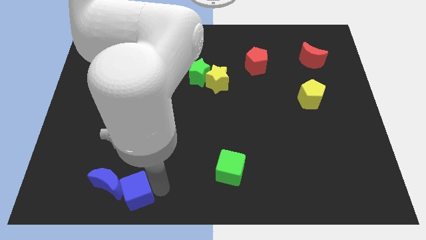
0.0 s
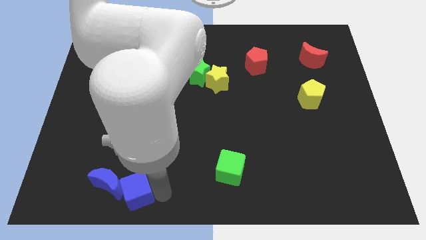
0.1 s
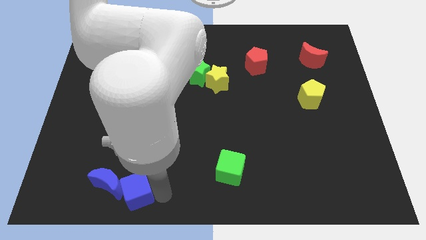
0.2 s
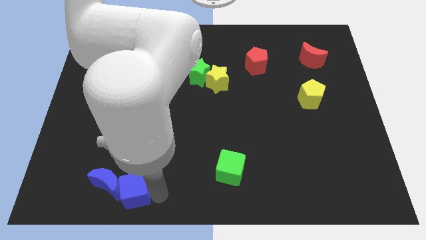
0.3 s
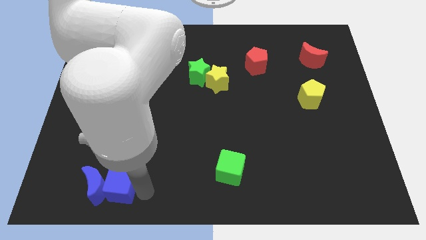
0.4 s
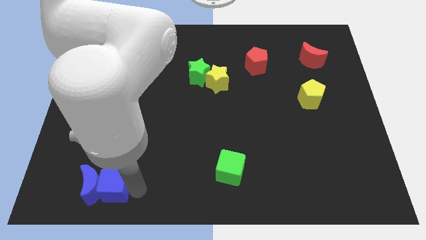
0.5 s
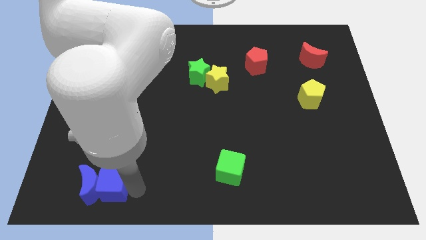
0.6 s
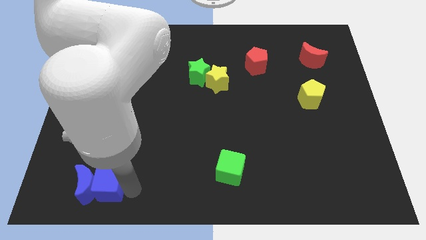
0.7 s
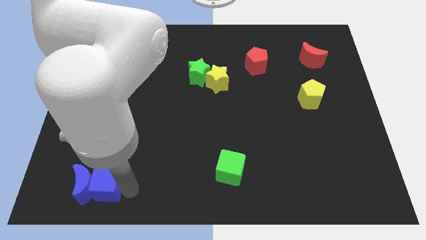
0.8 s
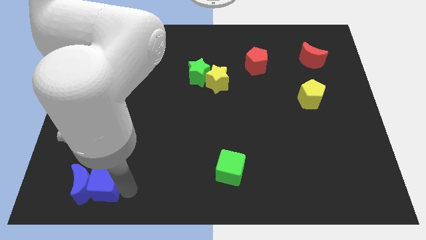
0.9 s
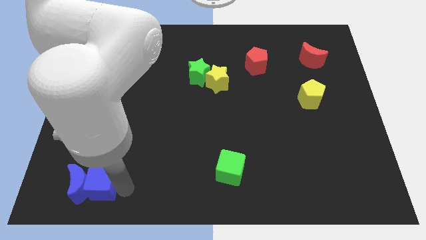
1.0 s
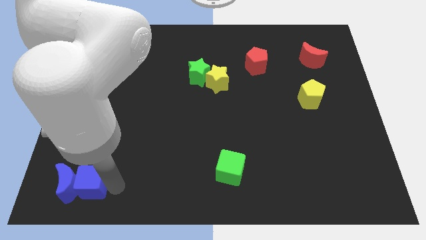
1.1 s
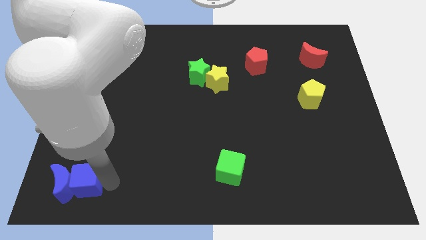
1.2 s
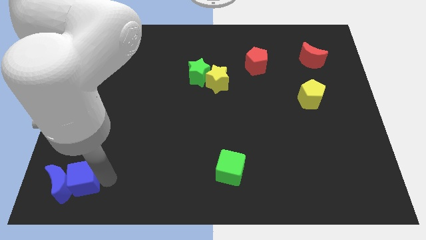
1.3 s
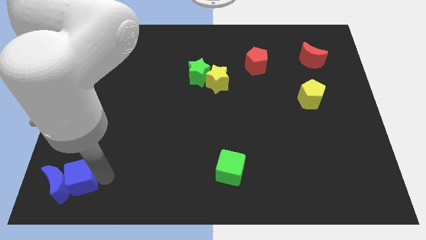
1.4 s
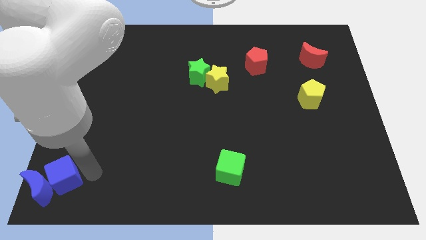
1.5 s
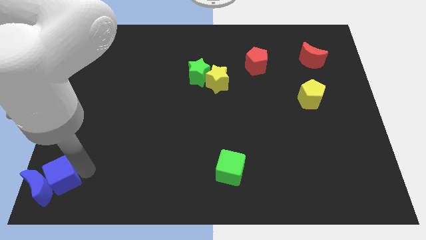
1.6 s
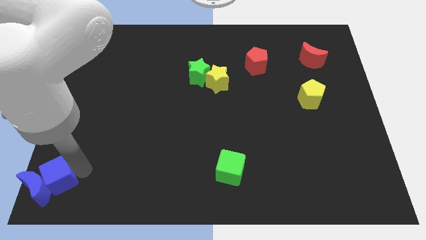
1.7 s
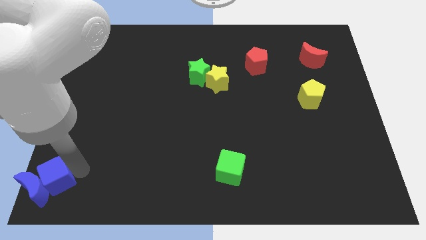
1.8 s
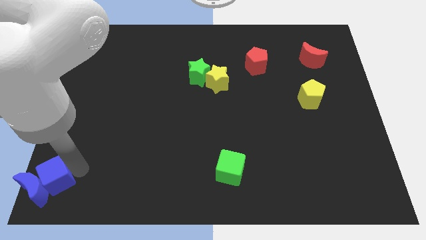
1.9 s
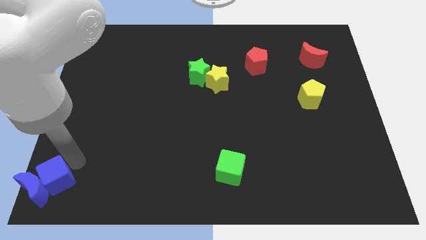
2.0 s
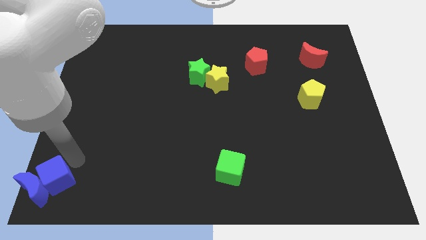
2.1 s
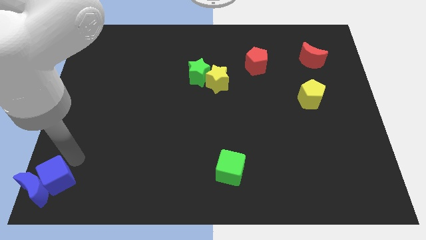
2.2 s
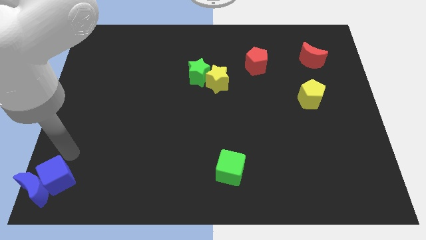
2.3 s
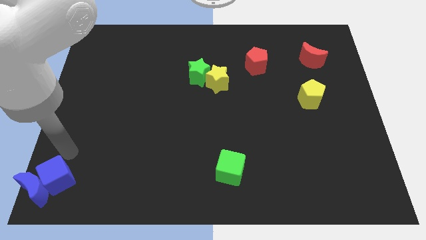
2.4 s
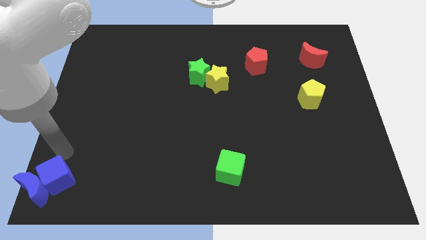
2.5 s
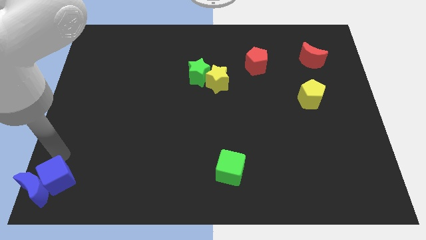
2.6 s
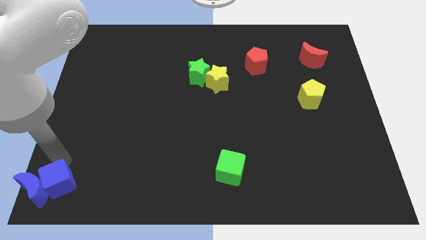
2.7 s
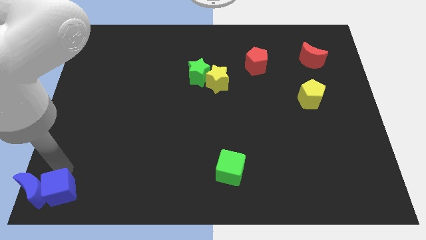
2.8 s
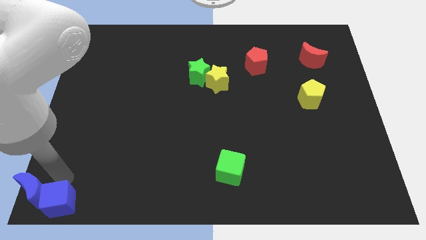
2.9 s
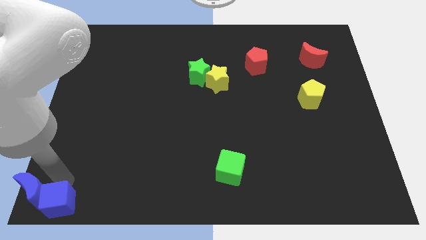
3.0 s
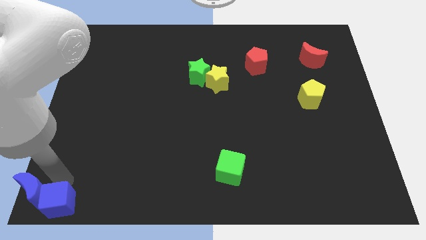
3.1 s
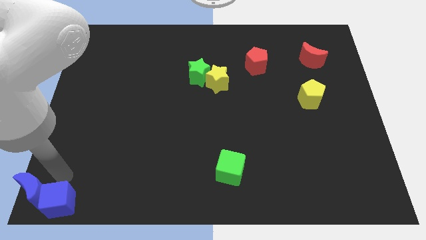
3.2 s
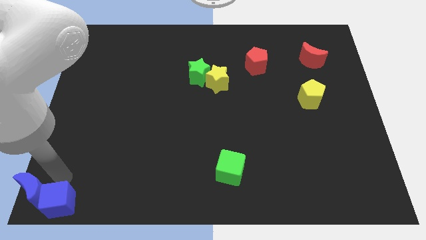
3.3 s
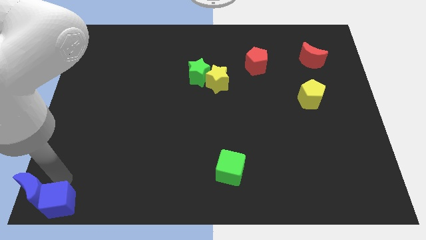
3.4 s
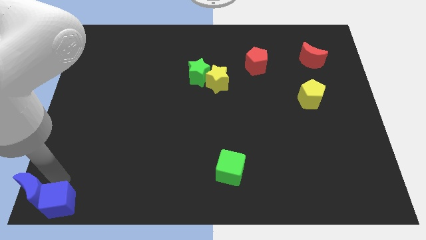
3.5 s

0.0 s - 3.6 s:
move the blue blocks to the bottom left of the board

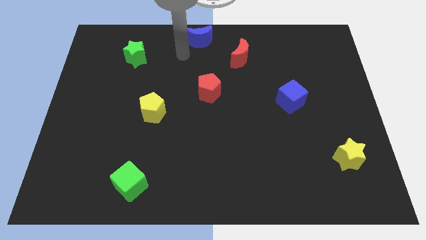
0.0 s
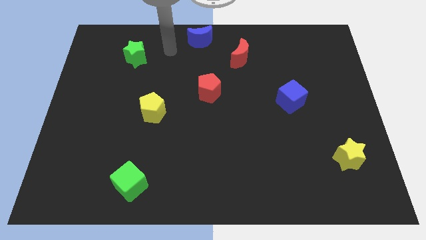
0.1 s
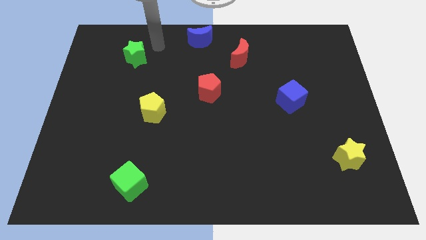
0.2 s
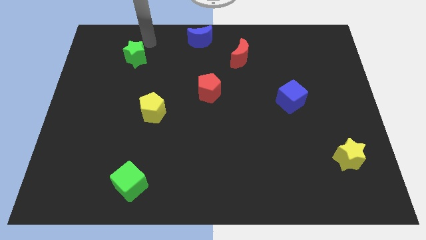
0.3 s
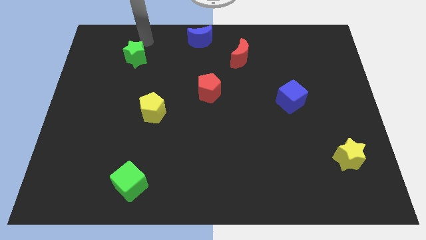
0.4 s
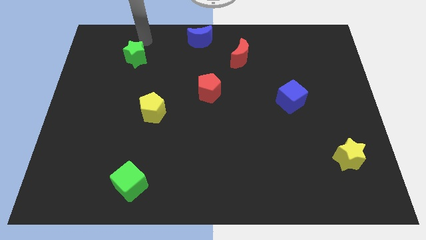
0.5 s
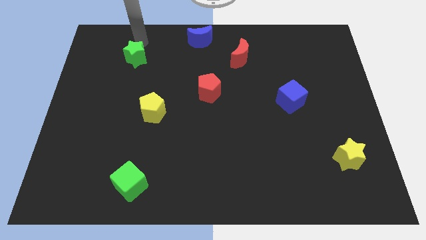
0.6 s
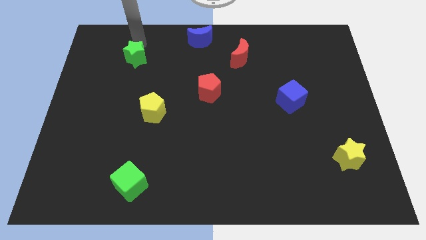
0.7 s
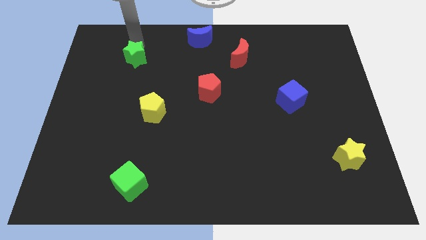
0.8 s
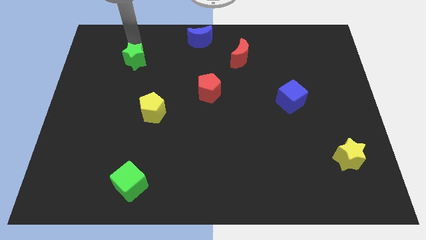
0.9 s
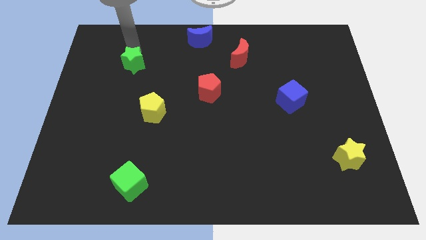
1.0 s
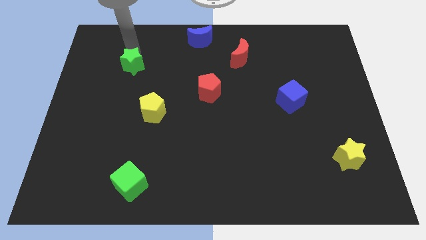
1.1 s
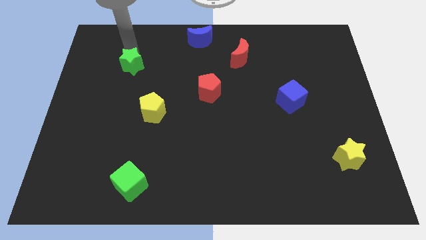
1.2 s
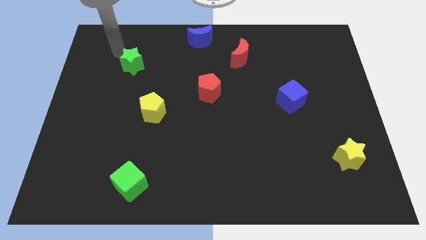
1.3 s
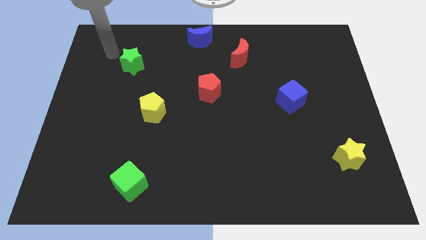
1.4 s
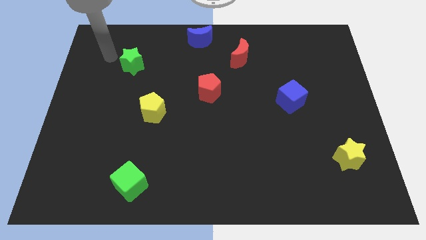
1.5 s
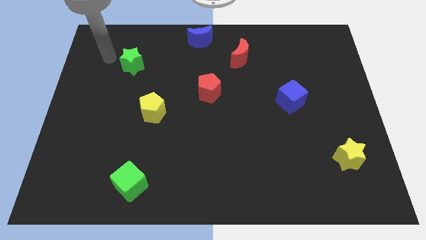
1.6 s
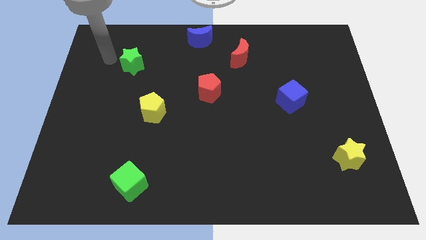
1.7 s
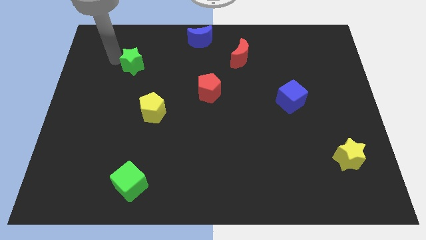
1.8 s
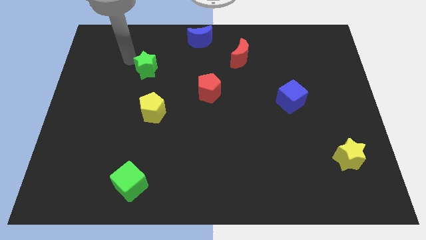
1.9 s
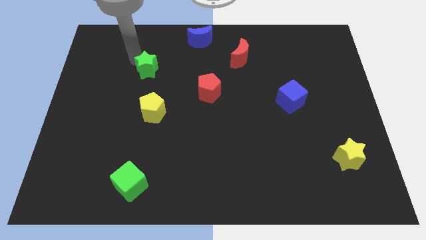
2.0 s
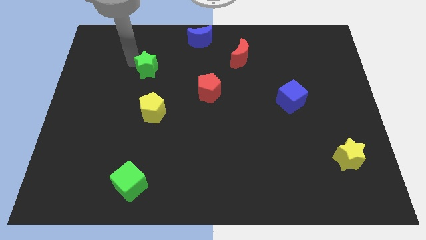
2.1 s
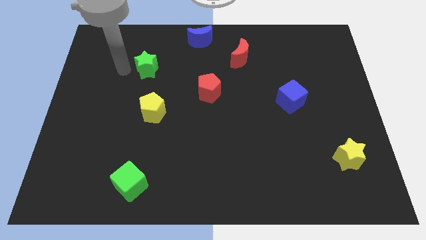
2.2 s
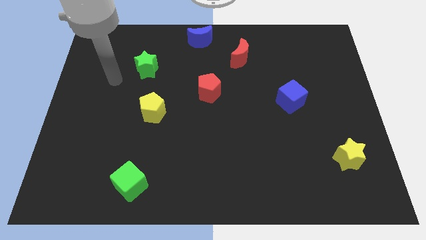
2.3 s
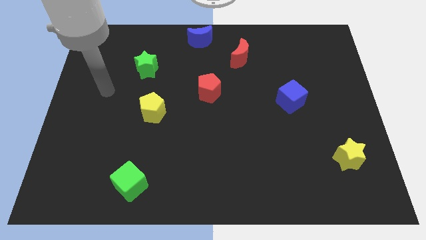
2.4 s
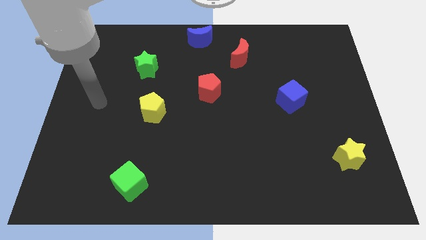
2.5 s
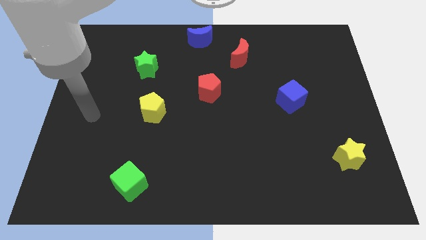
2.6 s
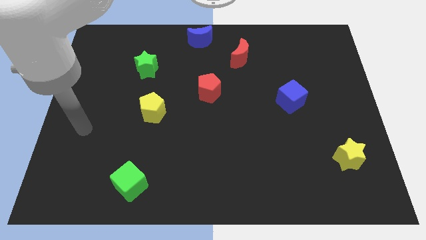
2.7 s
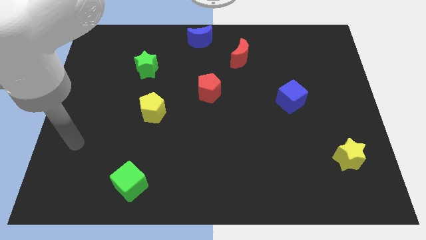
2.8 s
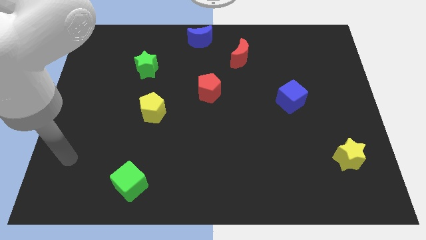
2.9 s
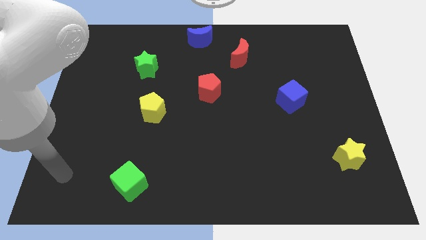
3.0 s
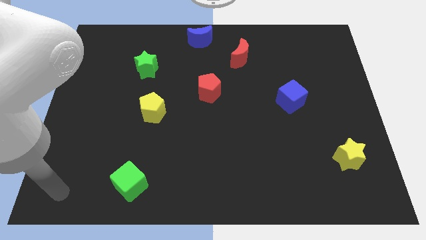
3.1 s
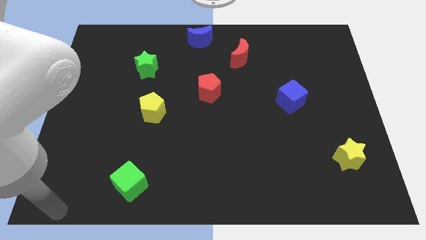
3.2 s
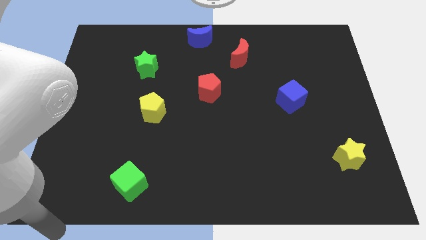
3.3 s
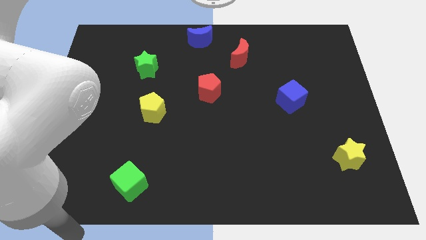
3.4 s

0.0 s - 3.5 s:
slide the green star to the top left side of the yellow pentagon

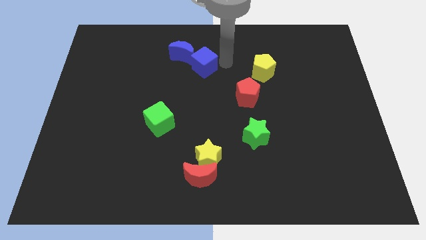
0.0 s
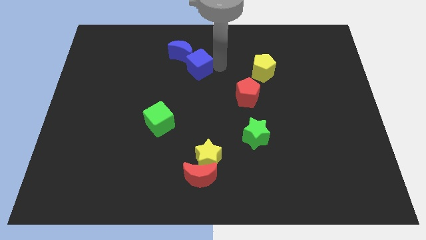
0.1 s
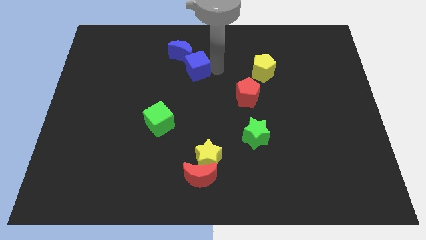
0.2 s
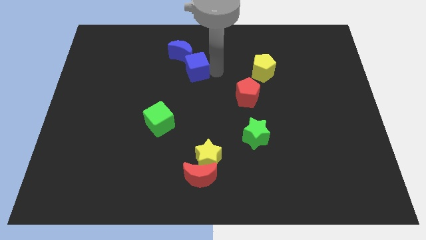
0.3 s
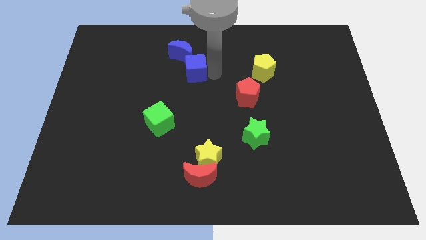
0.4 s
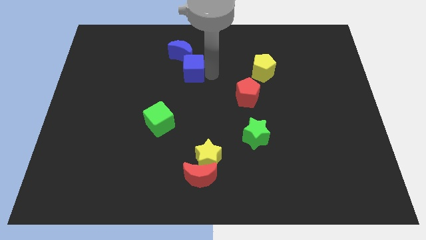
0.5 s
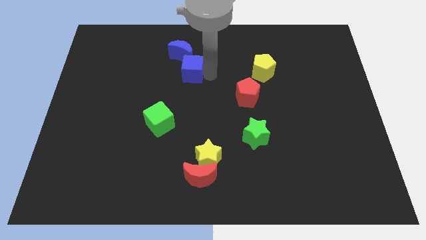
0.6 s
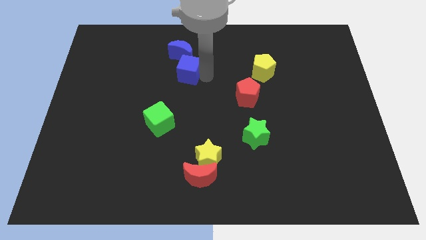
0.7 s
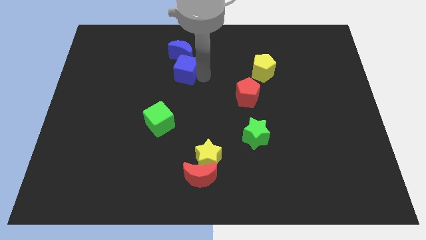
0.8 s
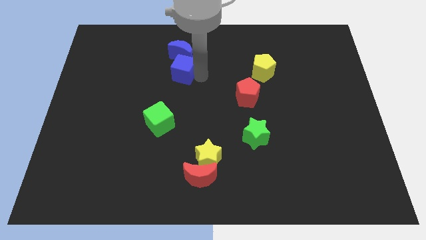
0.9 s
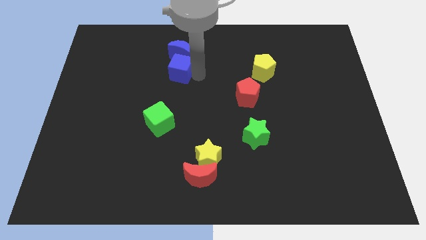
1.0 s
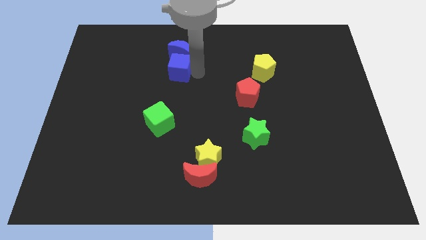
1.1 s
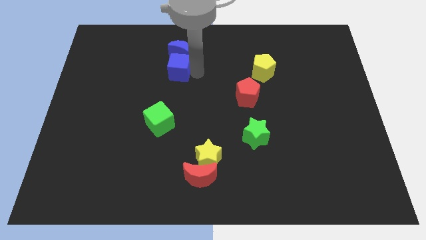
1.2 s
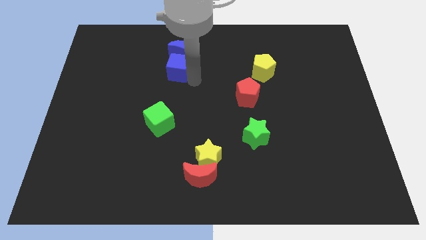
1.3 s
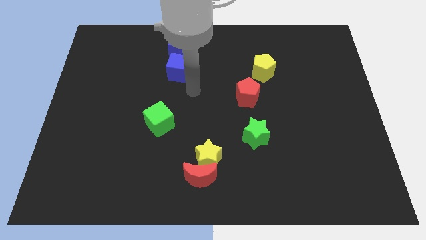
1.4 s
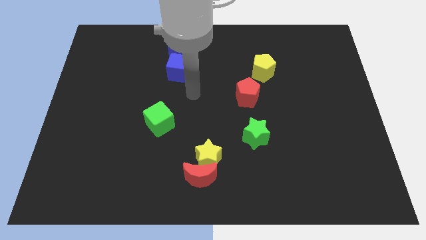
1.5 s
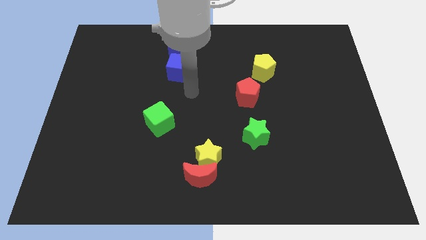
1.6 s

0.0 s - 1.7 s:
place the blue cube vertically below the blue crescent

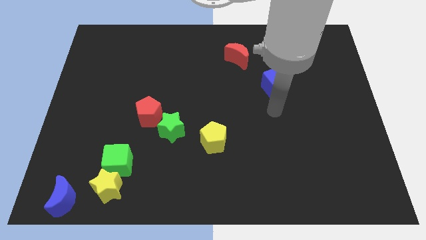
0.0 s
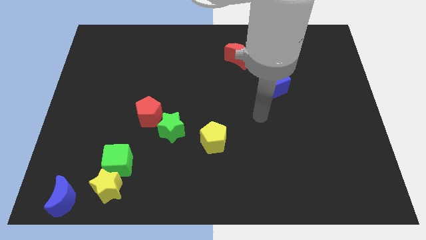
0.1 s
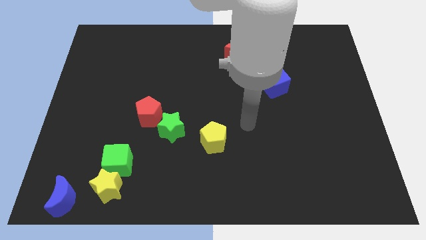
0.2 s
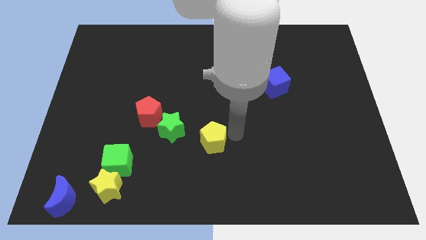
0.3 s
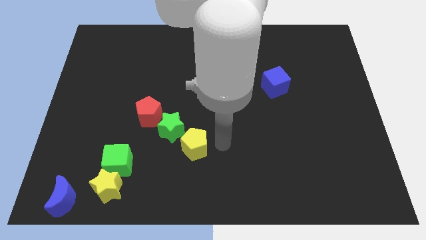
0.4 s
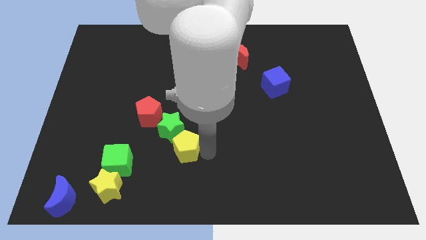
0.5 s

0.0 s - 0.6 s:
move the yellow pentagon close to the green star
